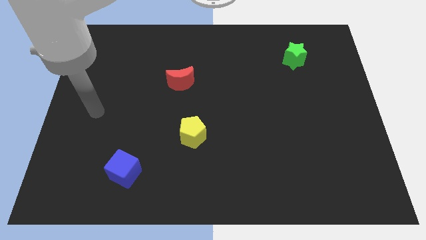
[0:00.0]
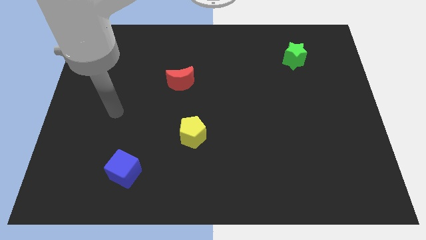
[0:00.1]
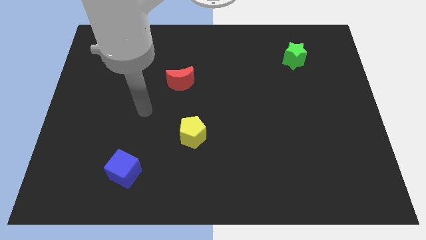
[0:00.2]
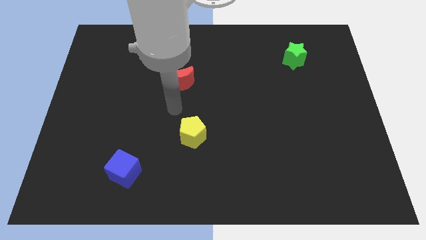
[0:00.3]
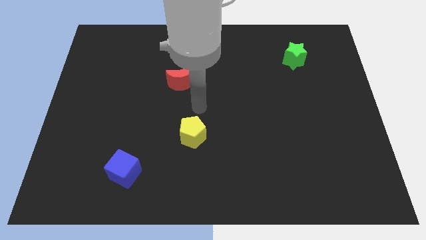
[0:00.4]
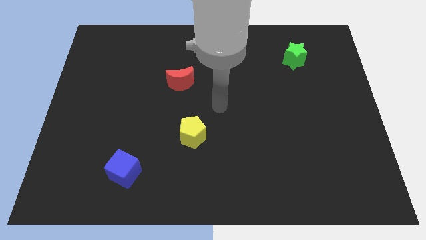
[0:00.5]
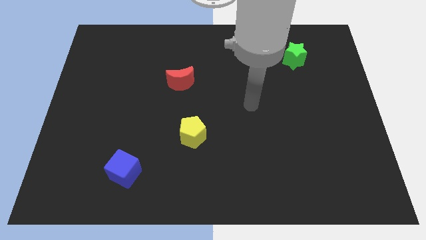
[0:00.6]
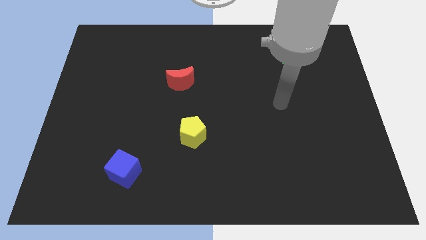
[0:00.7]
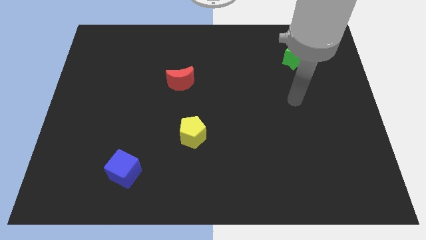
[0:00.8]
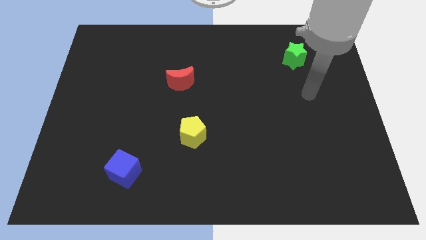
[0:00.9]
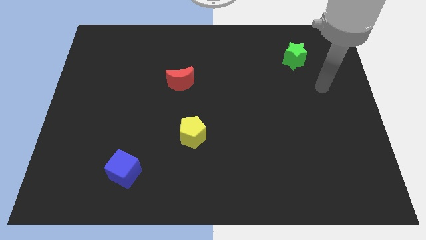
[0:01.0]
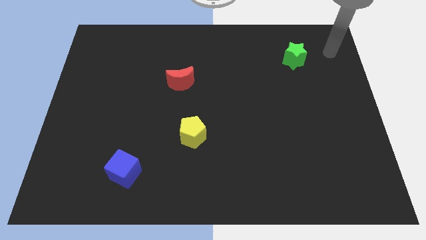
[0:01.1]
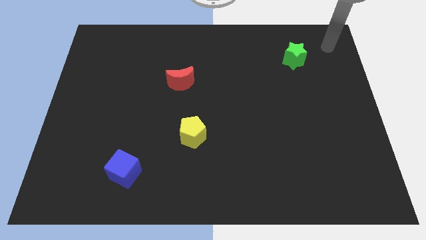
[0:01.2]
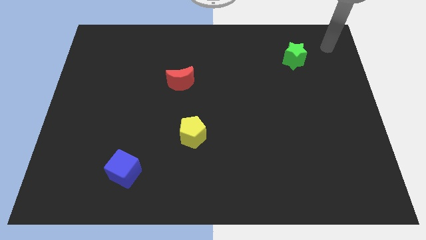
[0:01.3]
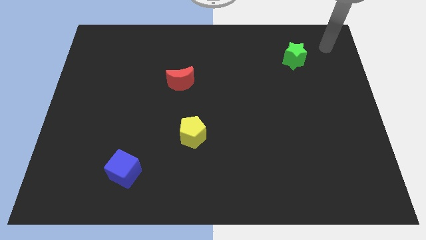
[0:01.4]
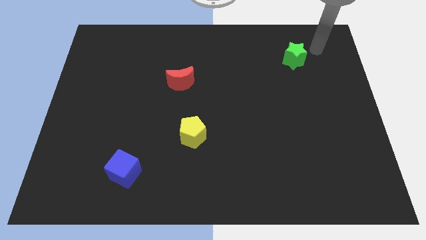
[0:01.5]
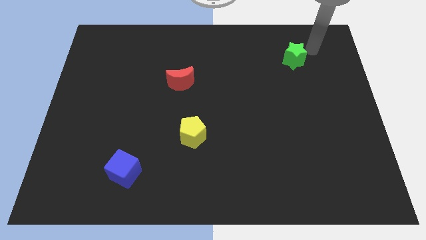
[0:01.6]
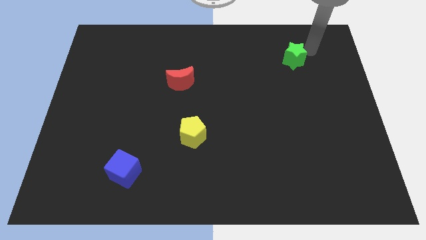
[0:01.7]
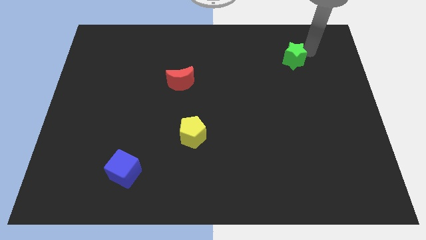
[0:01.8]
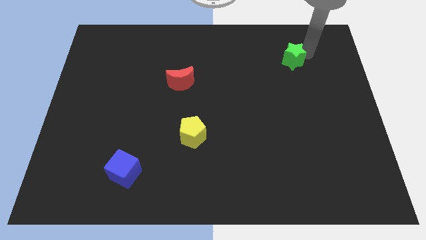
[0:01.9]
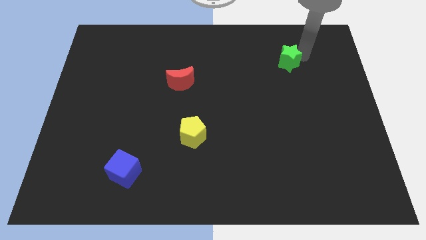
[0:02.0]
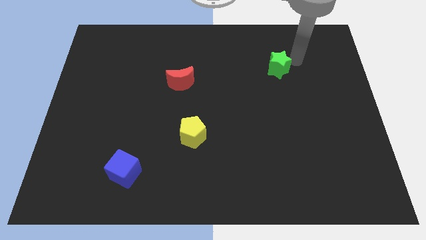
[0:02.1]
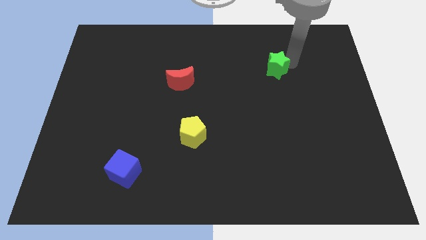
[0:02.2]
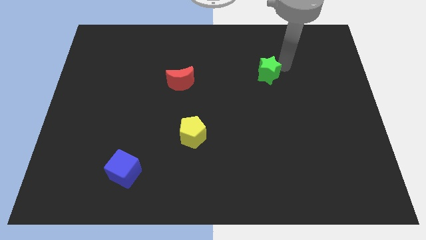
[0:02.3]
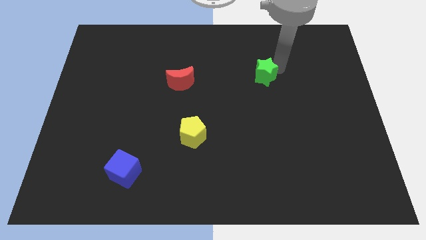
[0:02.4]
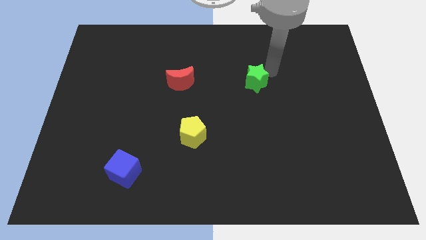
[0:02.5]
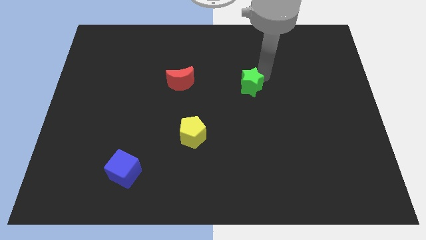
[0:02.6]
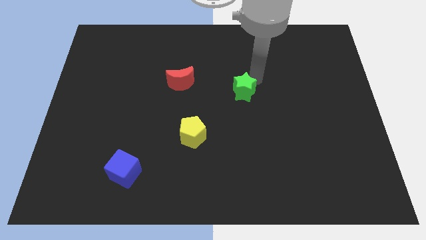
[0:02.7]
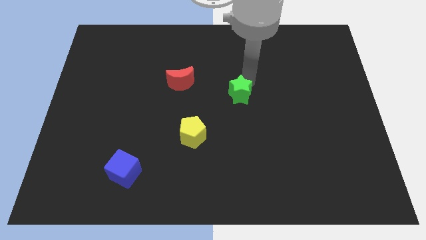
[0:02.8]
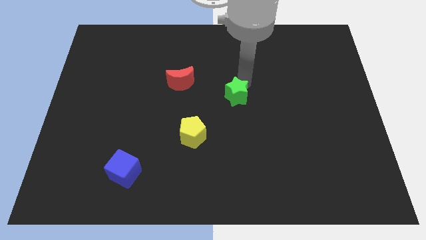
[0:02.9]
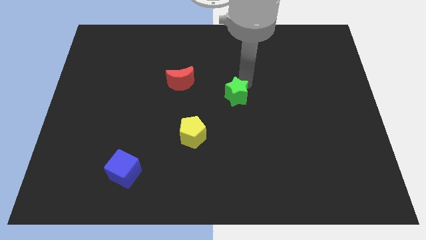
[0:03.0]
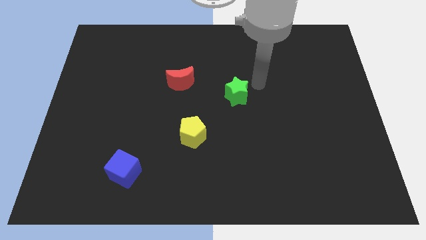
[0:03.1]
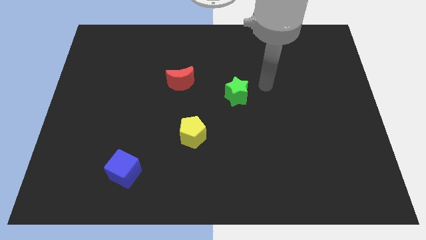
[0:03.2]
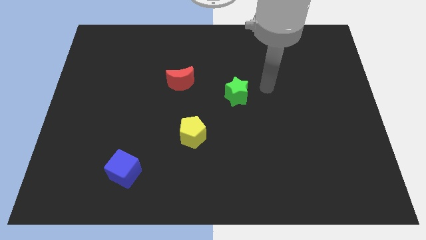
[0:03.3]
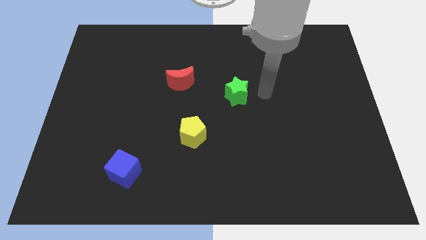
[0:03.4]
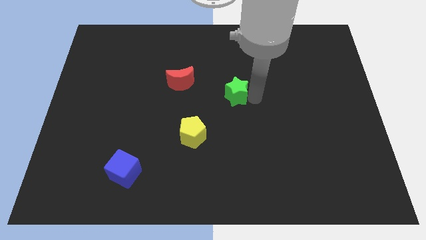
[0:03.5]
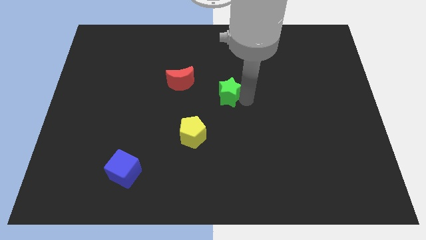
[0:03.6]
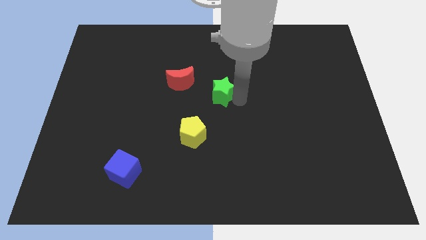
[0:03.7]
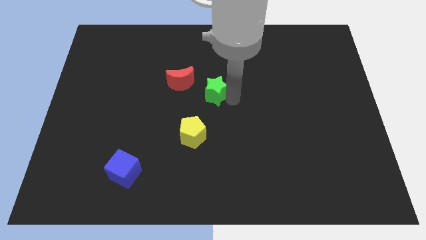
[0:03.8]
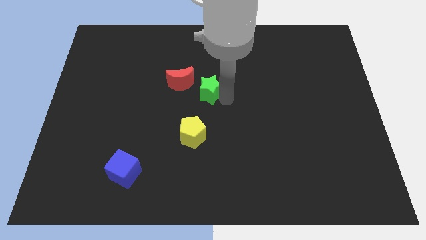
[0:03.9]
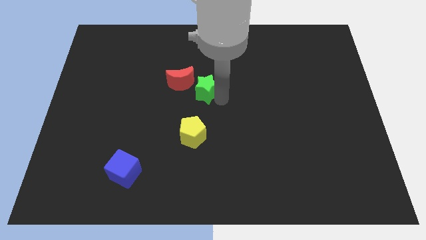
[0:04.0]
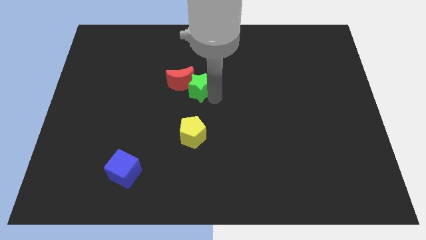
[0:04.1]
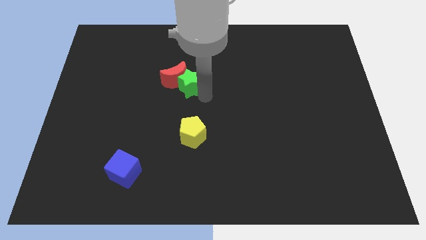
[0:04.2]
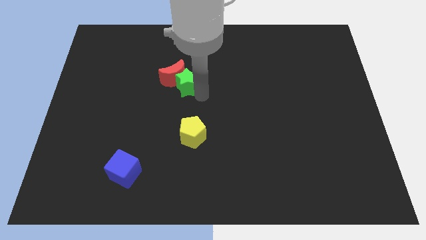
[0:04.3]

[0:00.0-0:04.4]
move the green star towards the moon

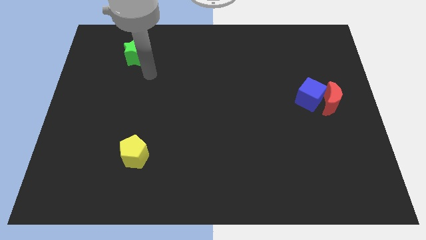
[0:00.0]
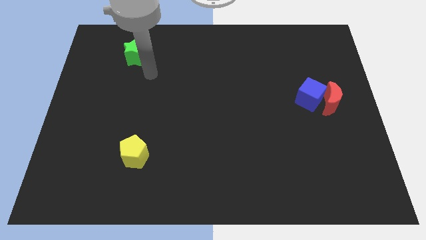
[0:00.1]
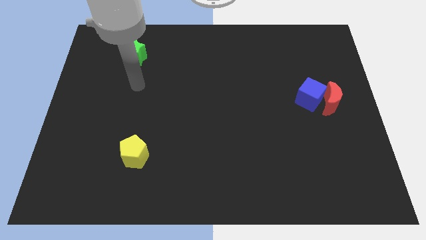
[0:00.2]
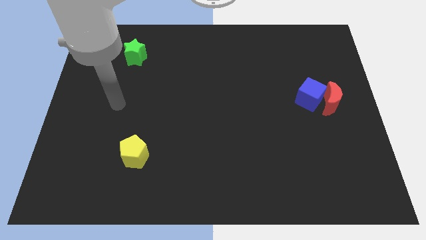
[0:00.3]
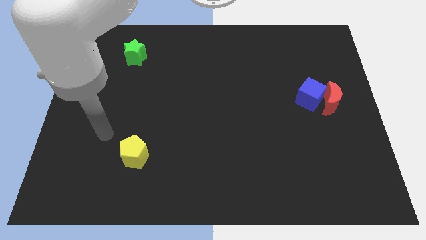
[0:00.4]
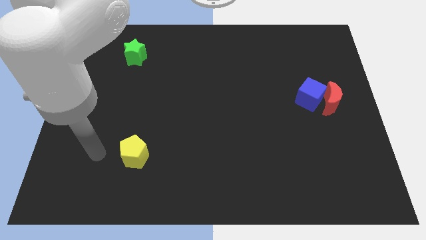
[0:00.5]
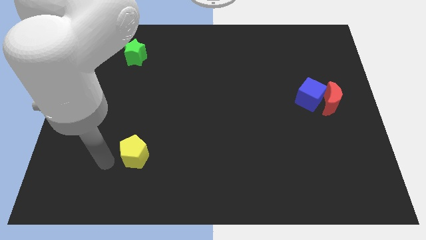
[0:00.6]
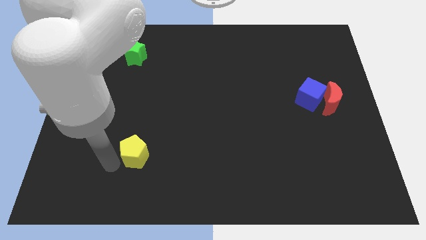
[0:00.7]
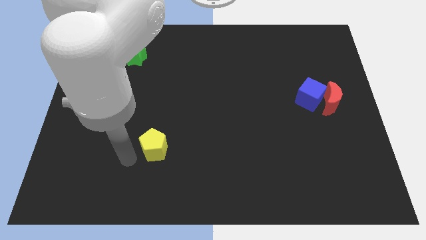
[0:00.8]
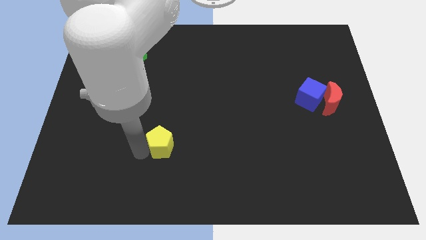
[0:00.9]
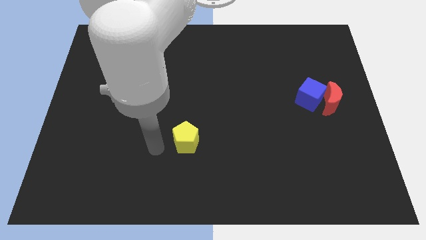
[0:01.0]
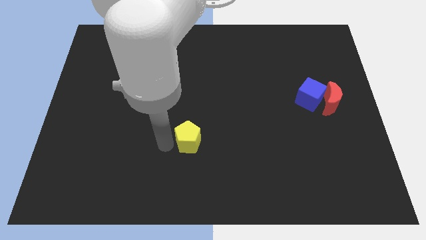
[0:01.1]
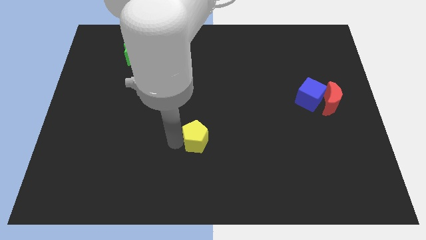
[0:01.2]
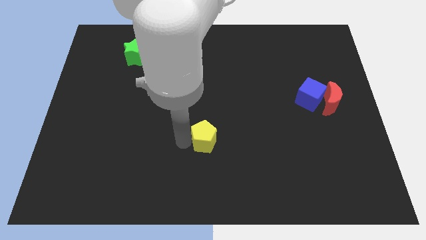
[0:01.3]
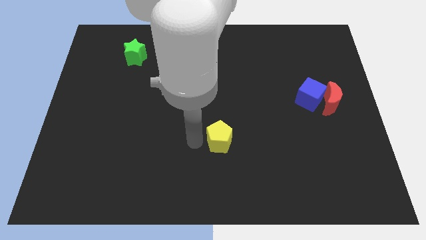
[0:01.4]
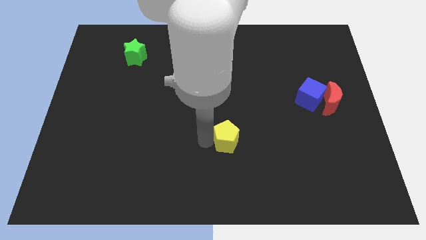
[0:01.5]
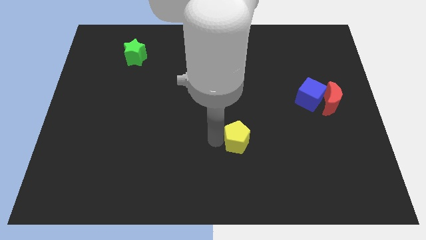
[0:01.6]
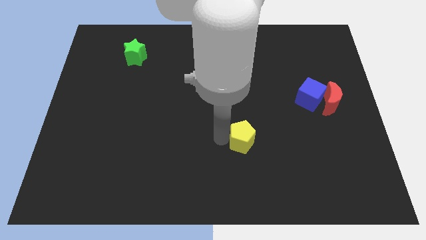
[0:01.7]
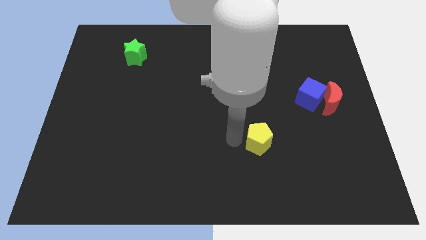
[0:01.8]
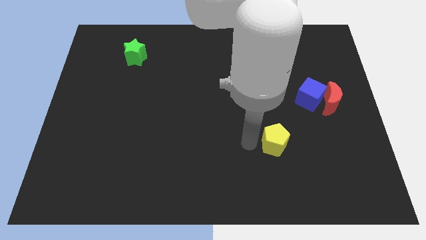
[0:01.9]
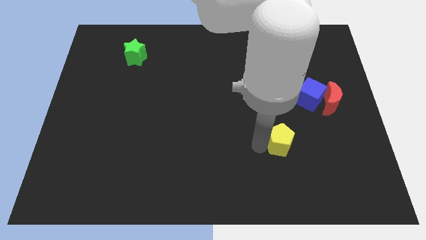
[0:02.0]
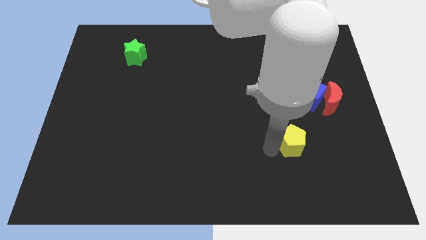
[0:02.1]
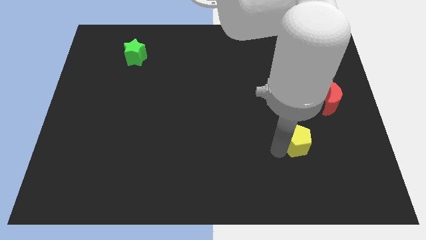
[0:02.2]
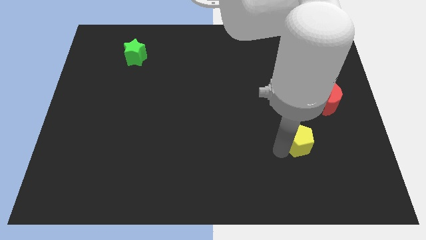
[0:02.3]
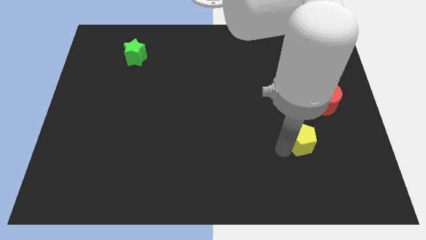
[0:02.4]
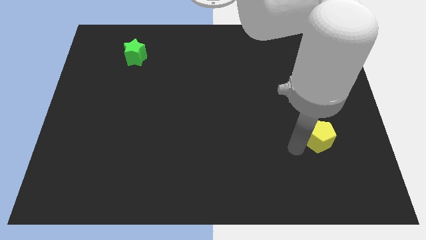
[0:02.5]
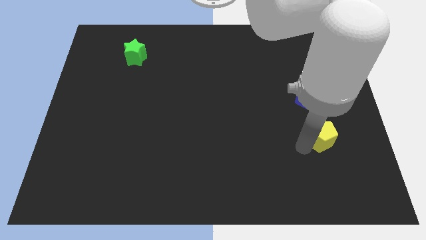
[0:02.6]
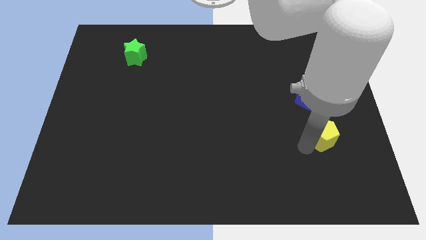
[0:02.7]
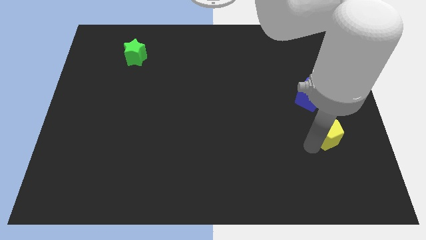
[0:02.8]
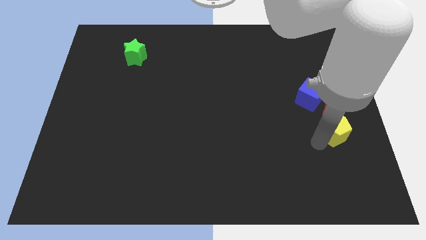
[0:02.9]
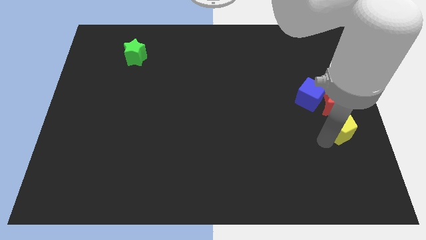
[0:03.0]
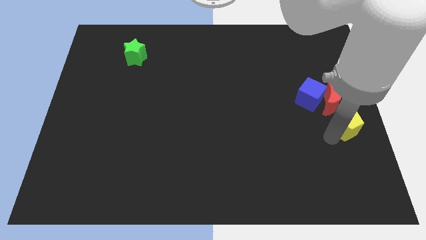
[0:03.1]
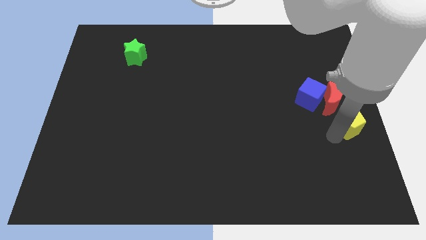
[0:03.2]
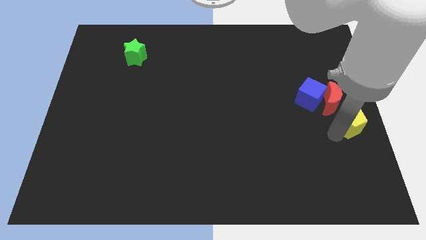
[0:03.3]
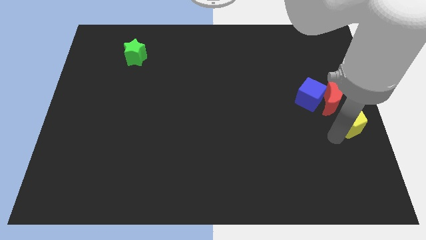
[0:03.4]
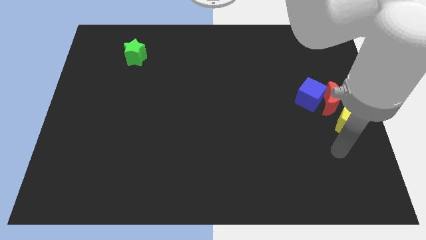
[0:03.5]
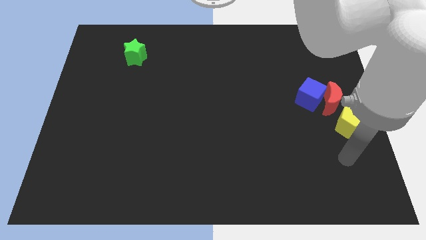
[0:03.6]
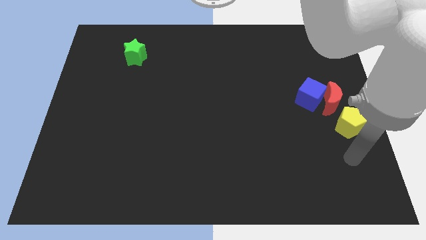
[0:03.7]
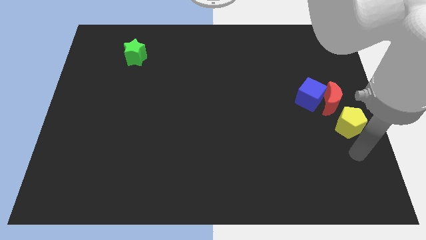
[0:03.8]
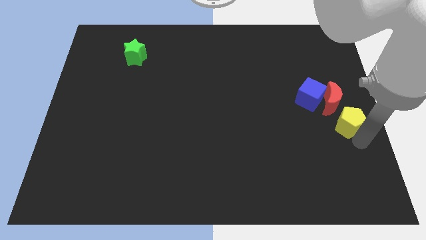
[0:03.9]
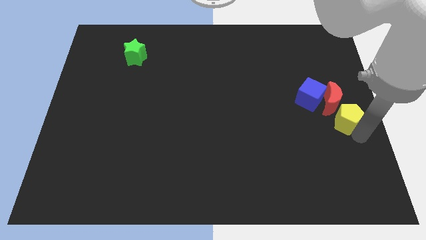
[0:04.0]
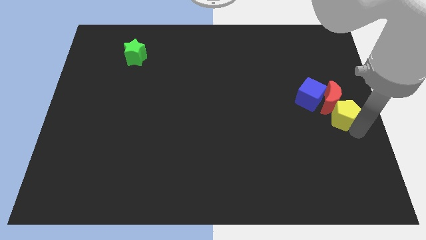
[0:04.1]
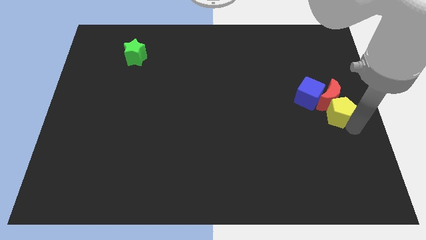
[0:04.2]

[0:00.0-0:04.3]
move the yellow pentagon towards the red moon
